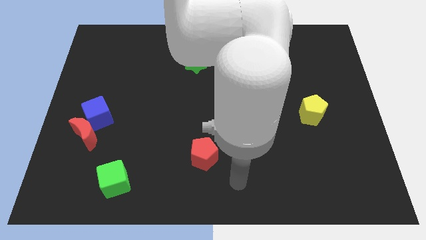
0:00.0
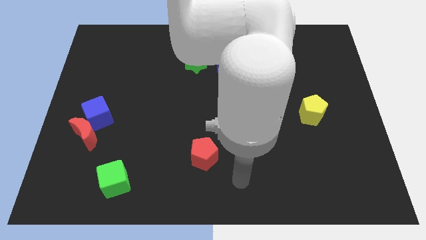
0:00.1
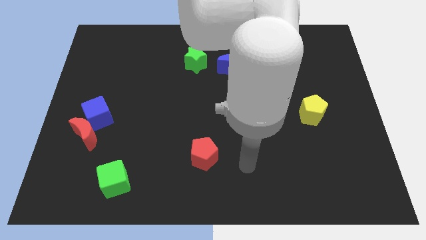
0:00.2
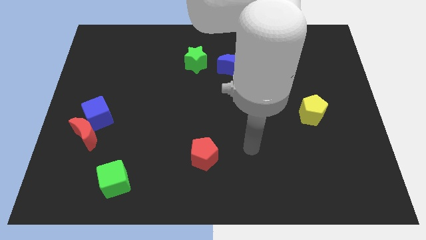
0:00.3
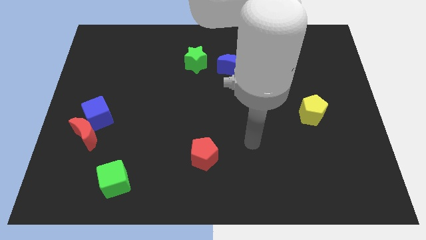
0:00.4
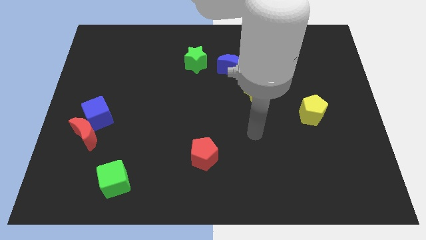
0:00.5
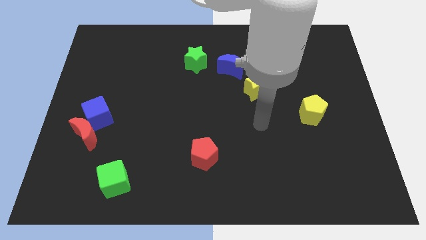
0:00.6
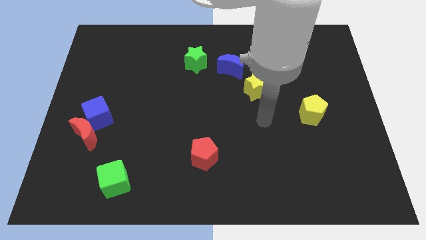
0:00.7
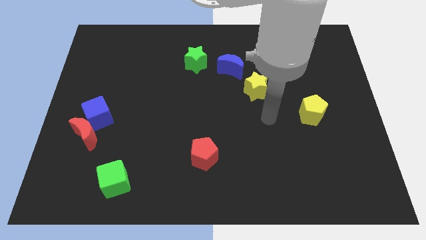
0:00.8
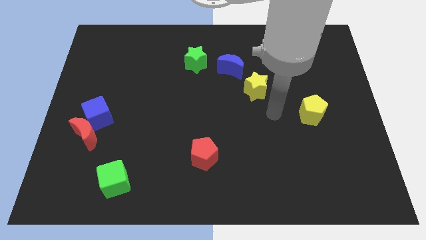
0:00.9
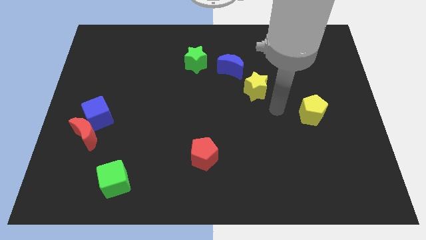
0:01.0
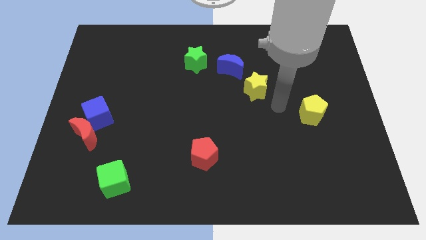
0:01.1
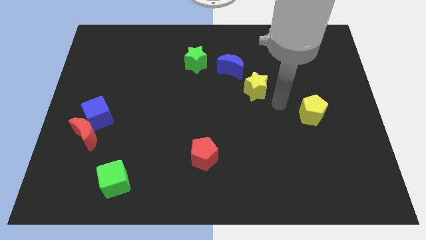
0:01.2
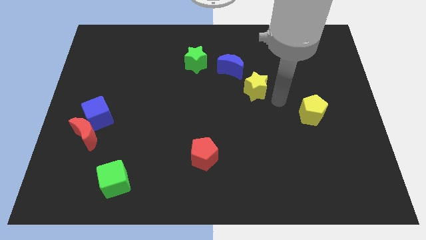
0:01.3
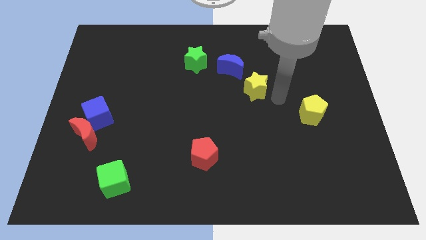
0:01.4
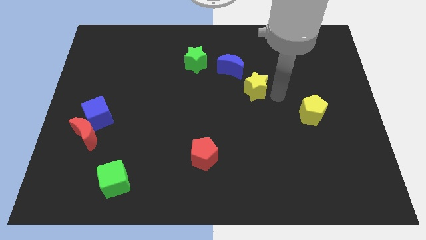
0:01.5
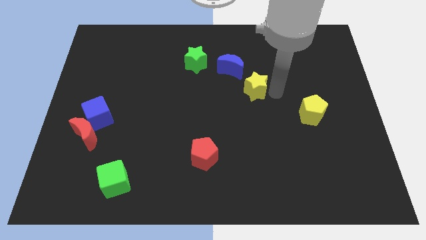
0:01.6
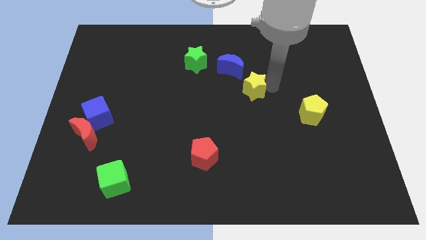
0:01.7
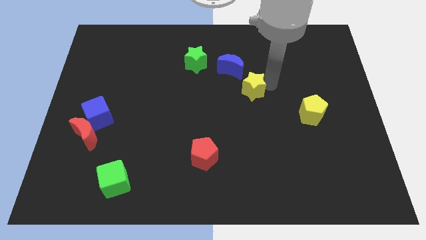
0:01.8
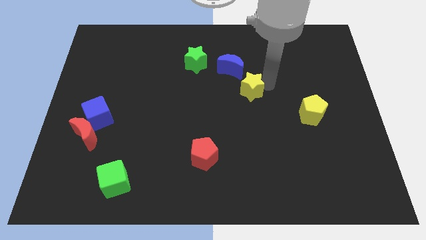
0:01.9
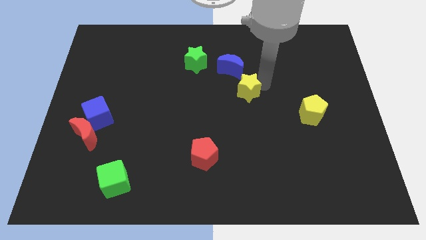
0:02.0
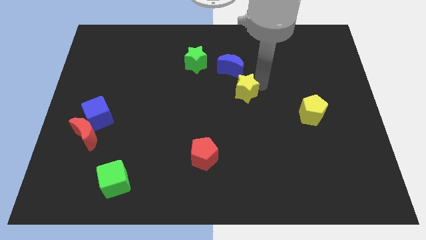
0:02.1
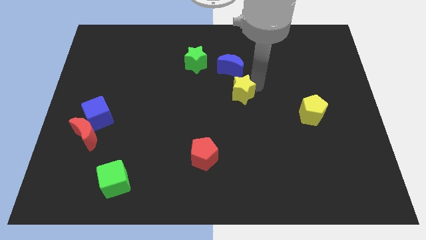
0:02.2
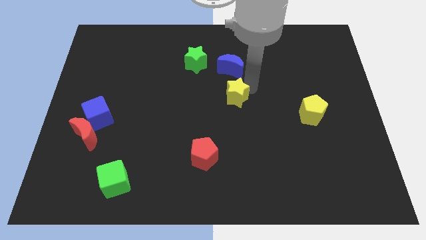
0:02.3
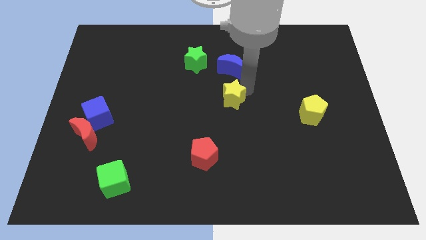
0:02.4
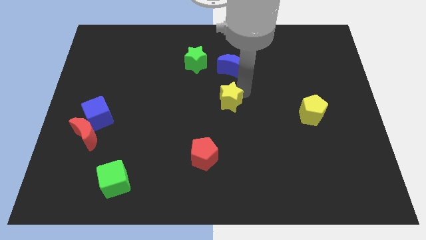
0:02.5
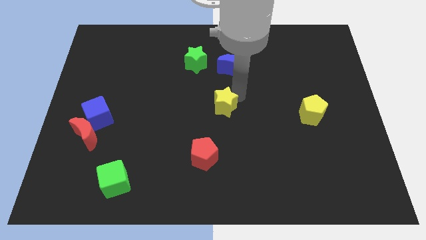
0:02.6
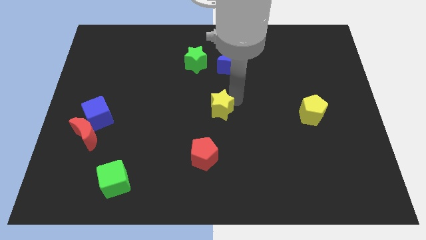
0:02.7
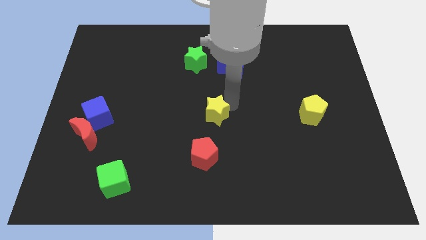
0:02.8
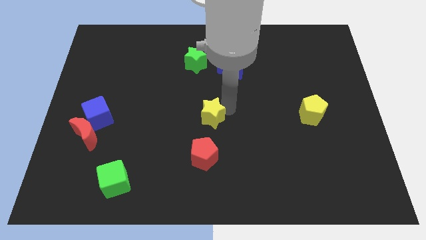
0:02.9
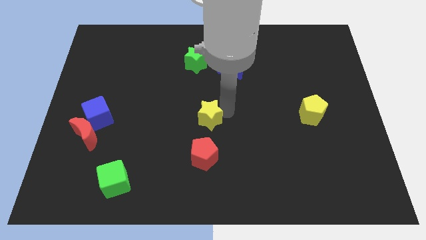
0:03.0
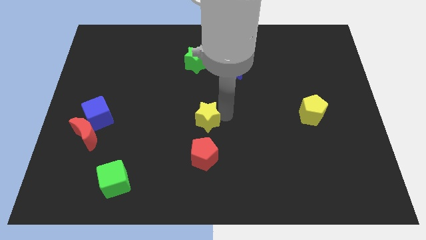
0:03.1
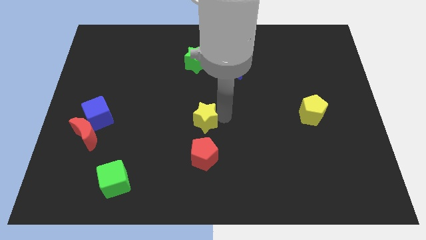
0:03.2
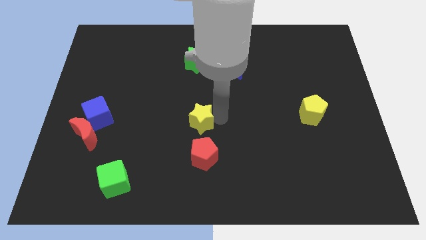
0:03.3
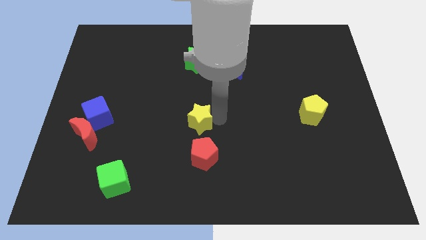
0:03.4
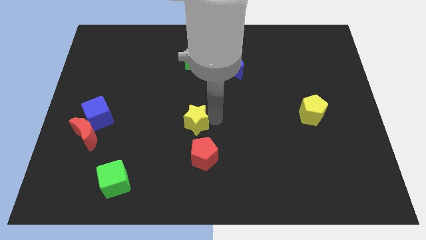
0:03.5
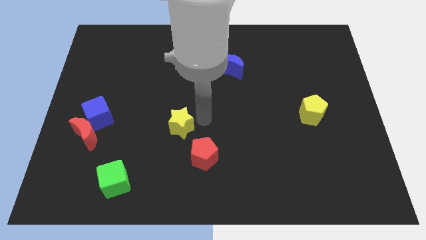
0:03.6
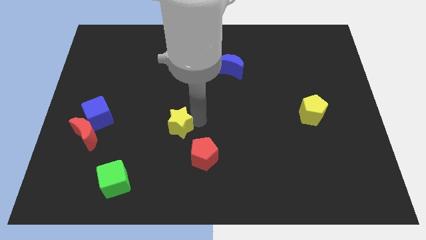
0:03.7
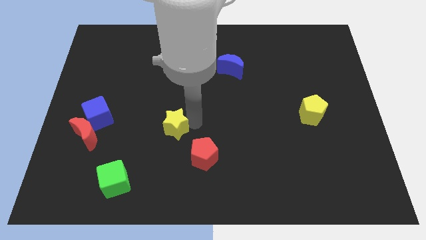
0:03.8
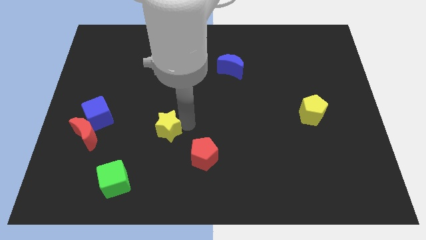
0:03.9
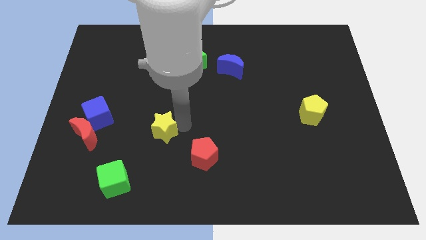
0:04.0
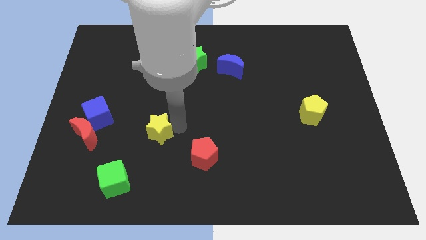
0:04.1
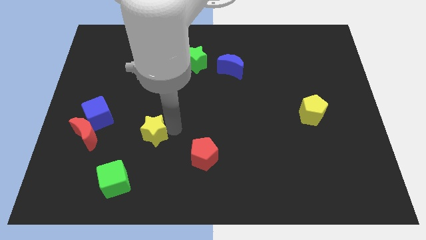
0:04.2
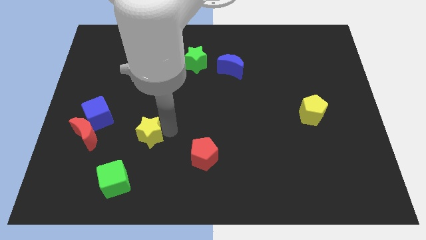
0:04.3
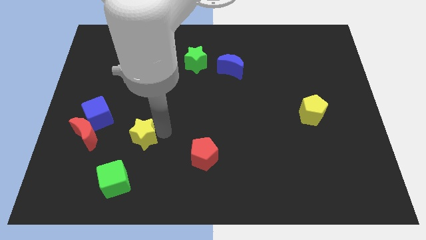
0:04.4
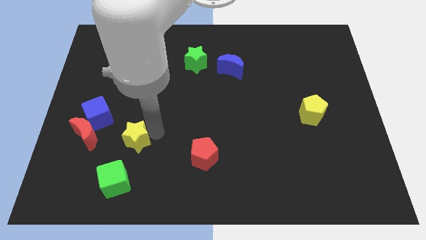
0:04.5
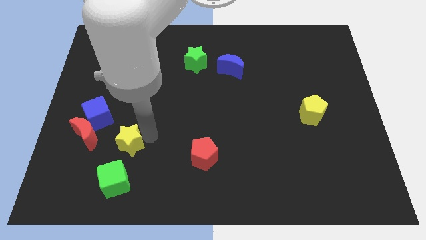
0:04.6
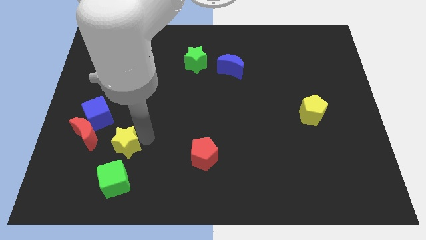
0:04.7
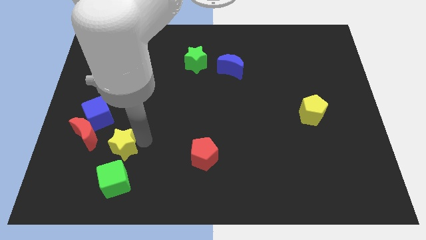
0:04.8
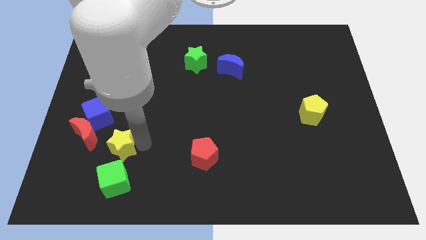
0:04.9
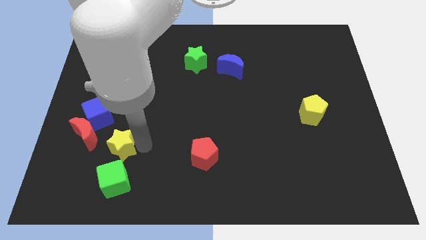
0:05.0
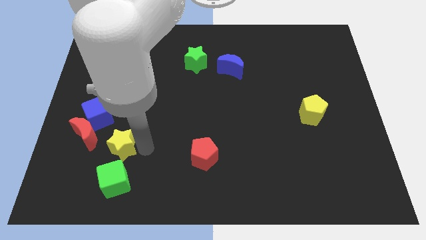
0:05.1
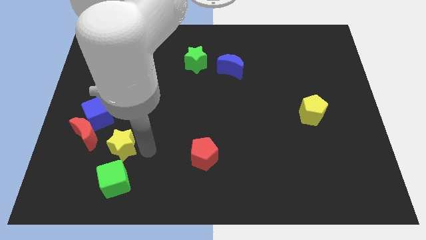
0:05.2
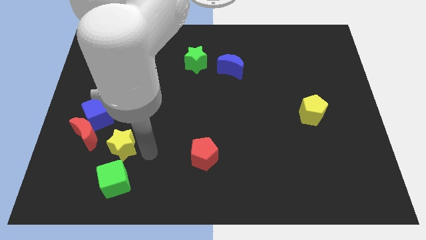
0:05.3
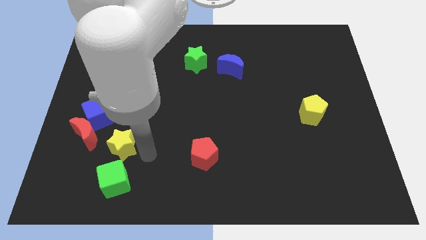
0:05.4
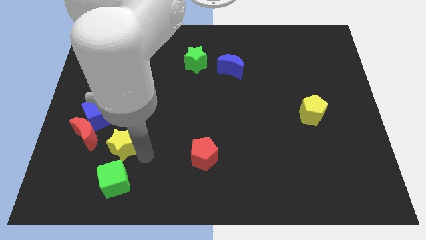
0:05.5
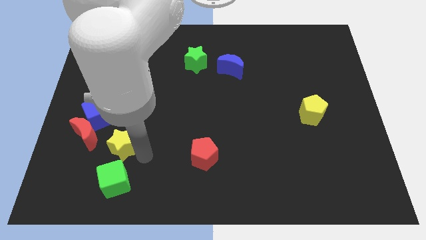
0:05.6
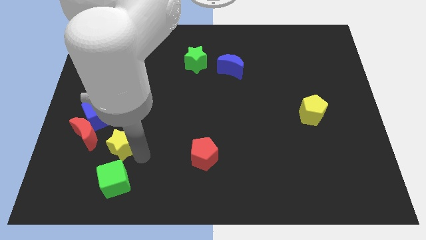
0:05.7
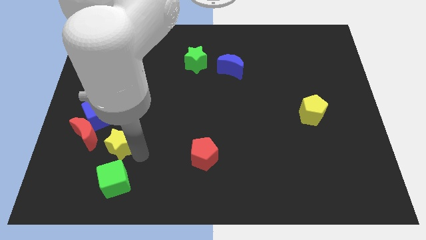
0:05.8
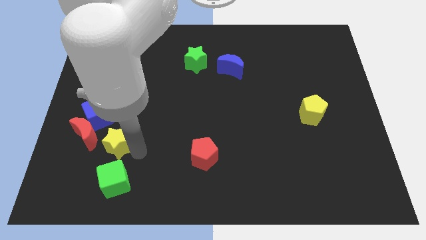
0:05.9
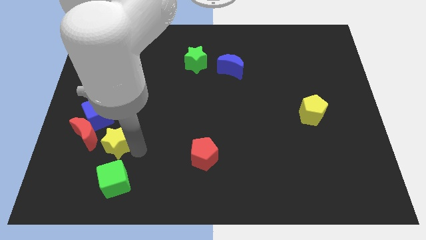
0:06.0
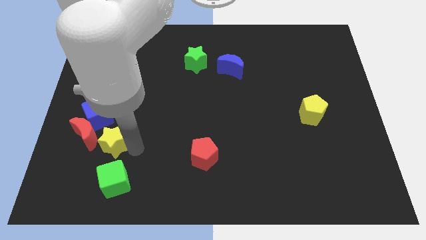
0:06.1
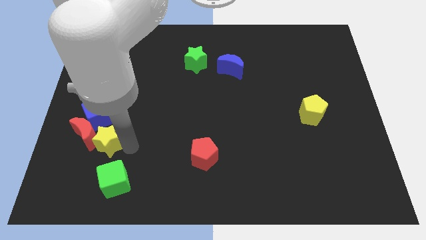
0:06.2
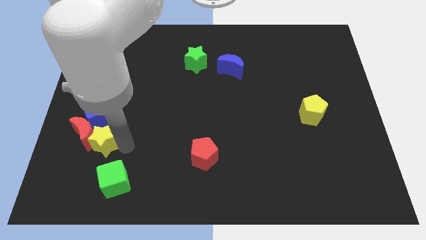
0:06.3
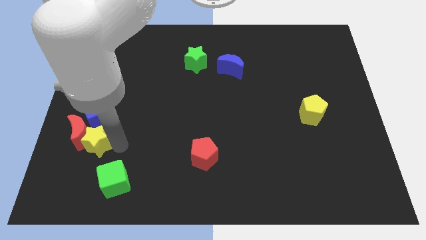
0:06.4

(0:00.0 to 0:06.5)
put the yellow star towards the red moon

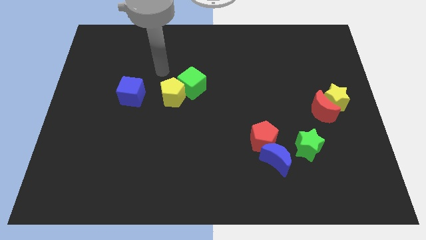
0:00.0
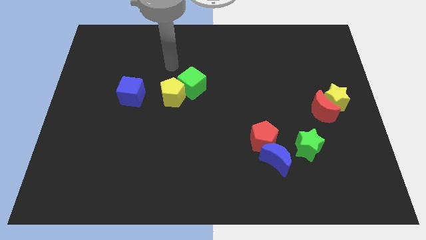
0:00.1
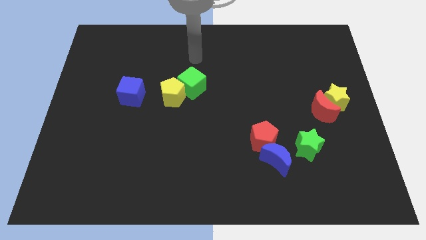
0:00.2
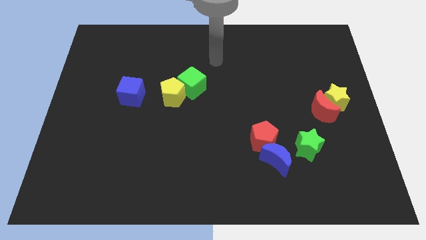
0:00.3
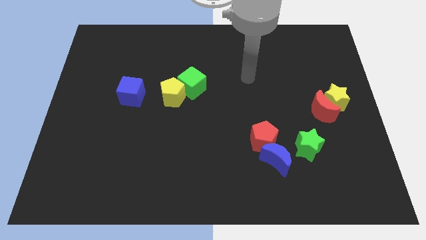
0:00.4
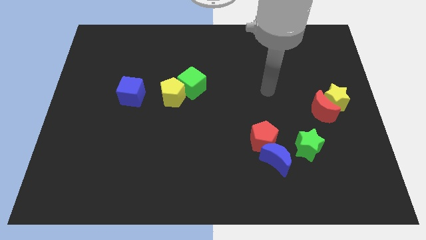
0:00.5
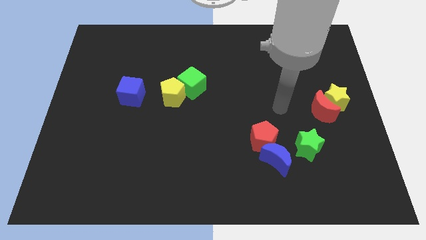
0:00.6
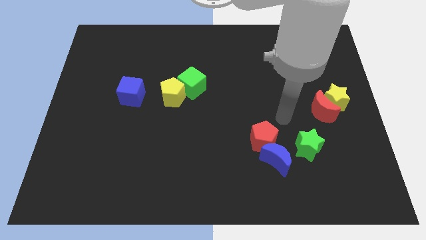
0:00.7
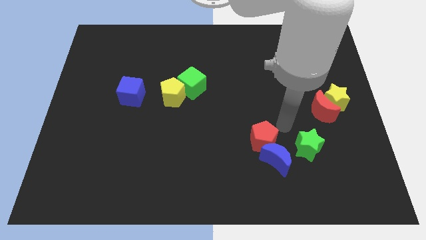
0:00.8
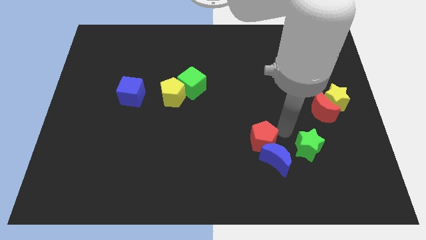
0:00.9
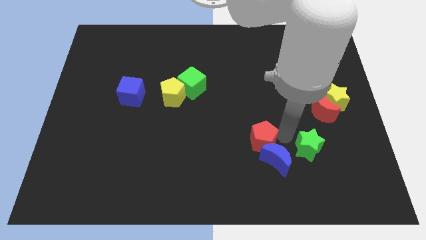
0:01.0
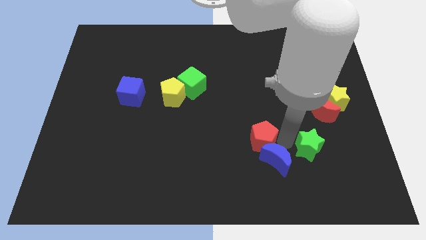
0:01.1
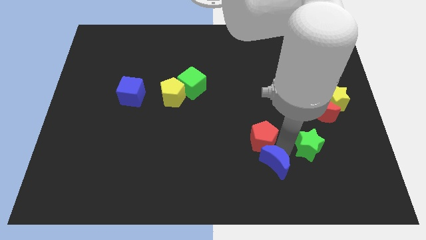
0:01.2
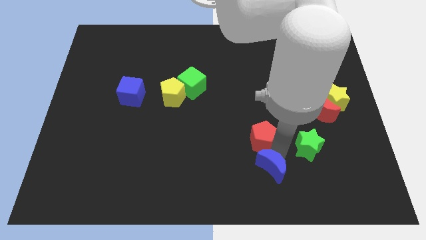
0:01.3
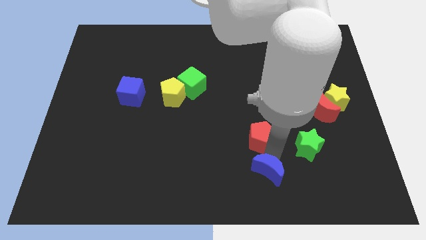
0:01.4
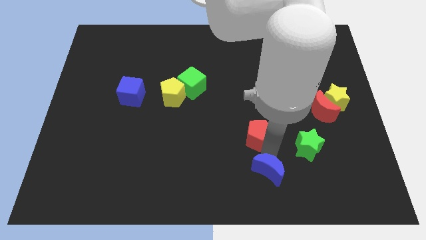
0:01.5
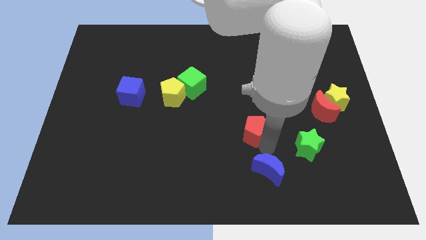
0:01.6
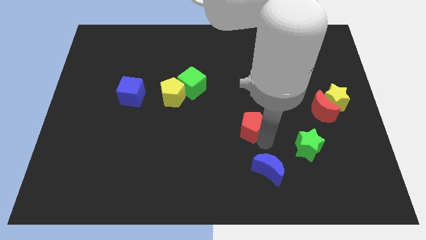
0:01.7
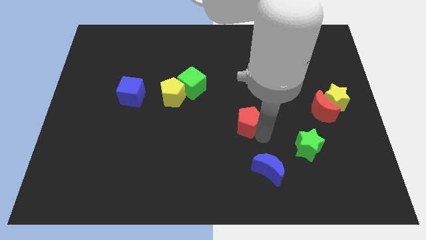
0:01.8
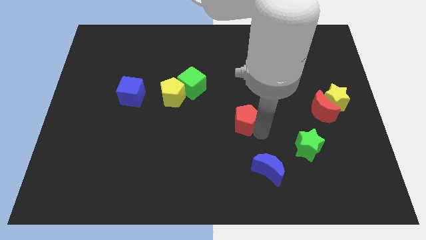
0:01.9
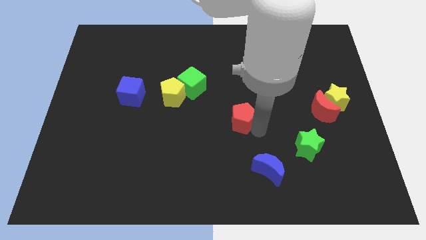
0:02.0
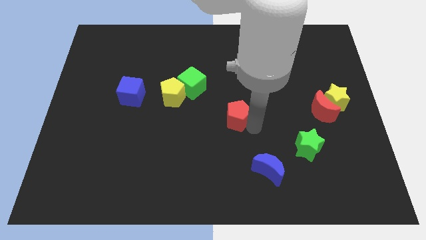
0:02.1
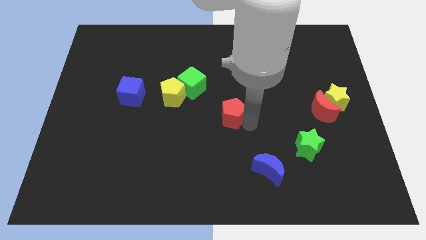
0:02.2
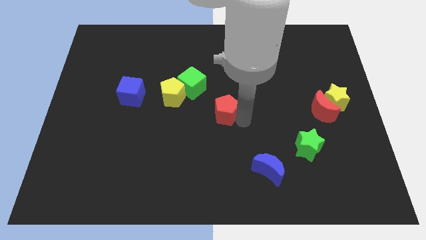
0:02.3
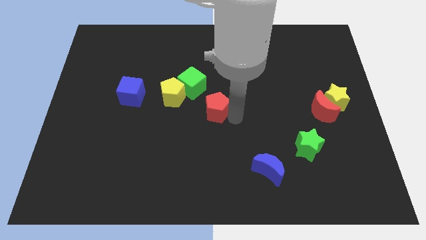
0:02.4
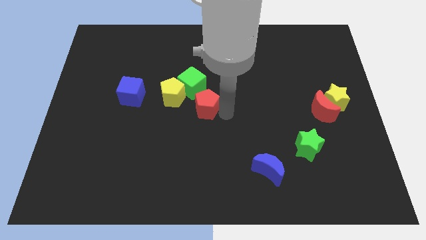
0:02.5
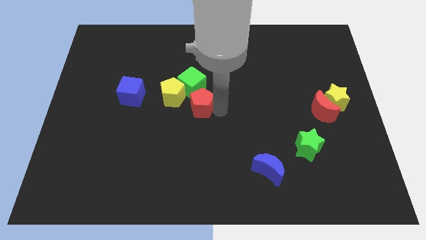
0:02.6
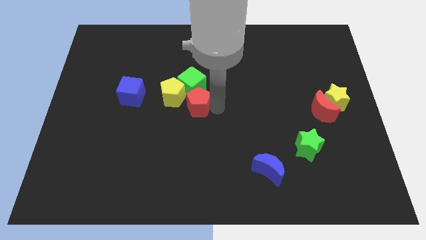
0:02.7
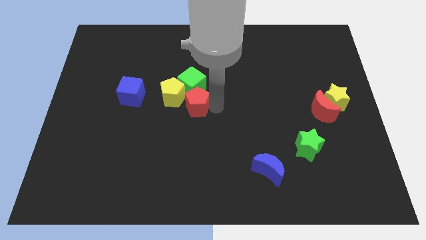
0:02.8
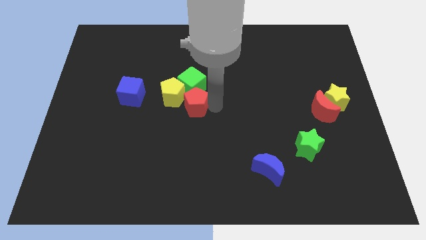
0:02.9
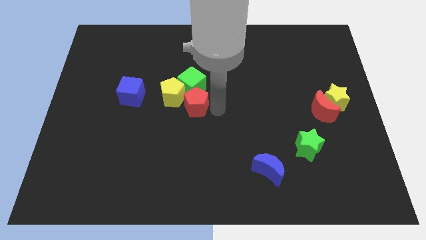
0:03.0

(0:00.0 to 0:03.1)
push the red pentagon to the green cube
